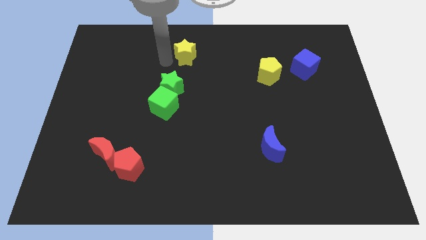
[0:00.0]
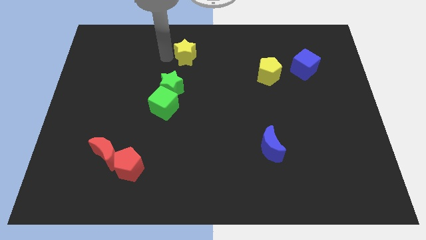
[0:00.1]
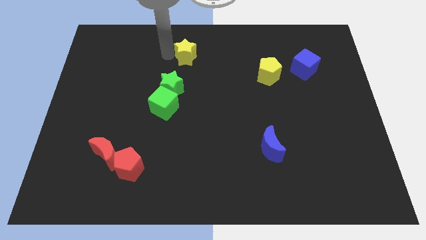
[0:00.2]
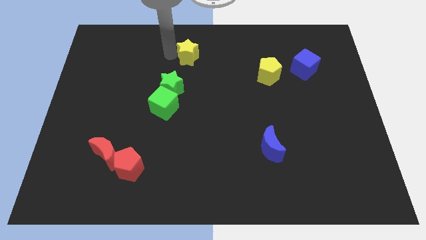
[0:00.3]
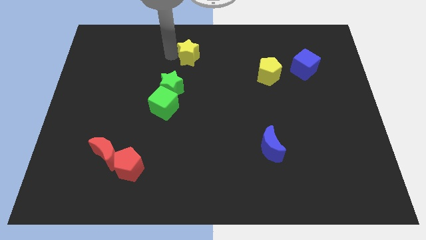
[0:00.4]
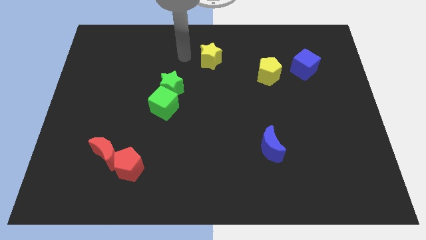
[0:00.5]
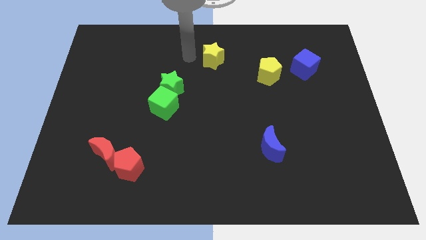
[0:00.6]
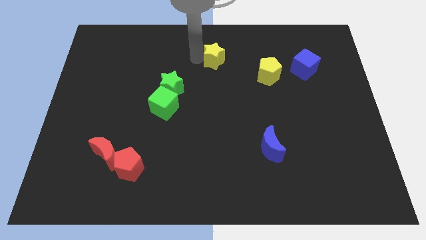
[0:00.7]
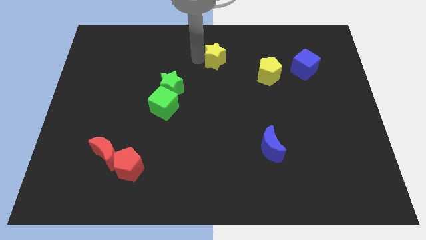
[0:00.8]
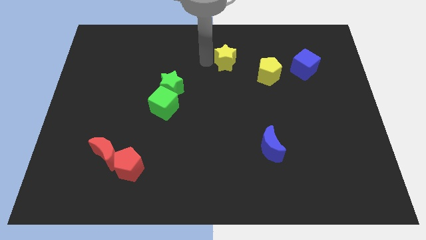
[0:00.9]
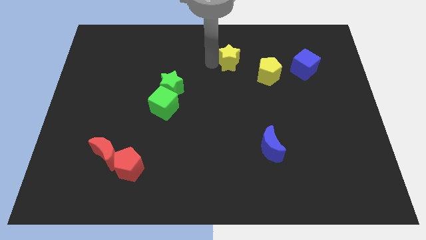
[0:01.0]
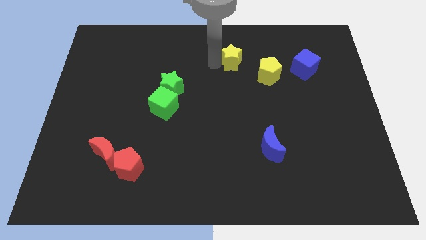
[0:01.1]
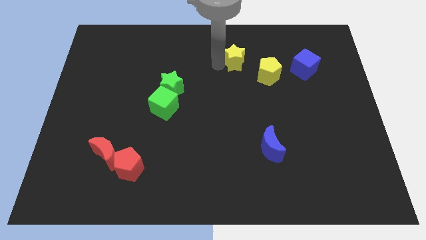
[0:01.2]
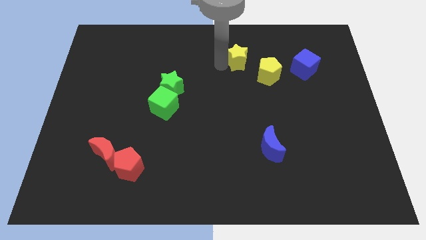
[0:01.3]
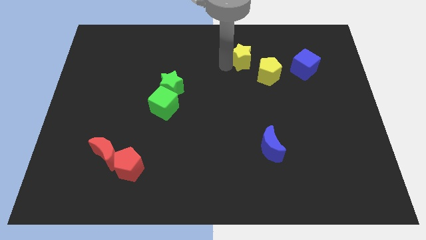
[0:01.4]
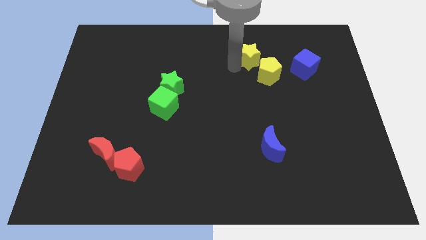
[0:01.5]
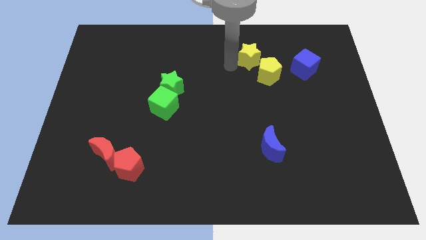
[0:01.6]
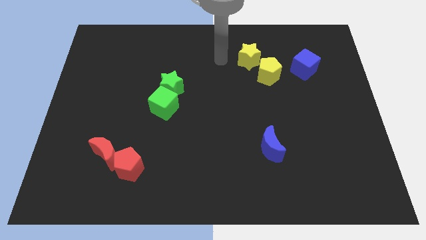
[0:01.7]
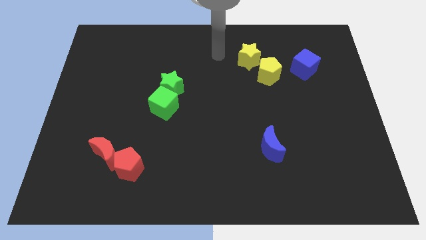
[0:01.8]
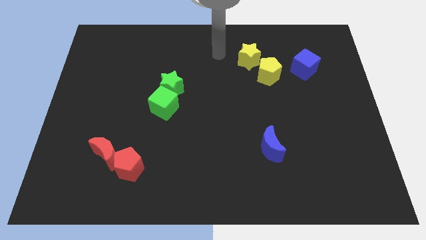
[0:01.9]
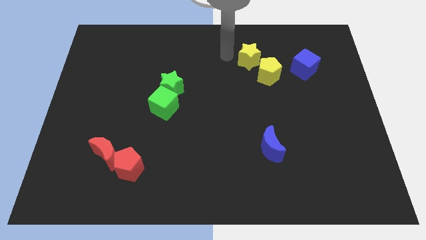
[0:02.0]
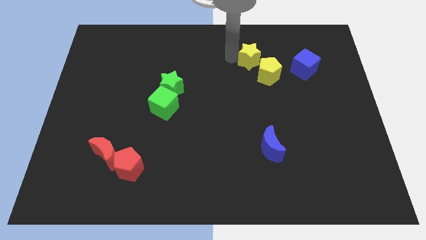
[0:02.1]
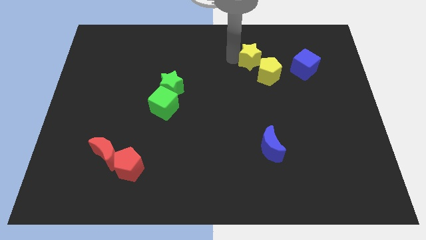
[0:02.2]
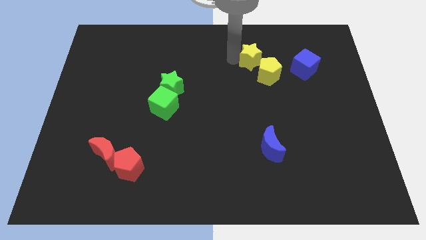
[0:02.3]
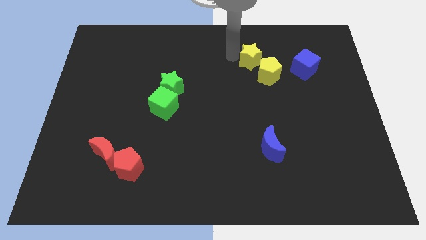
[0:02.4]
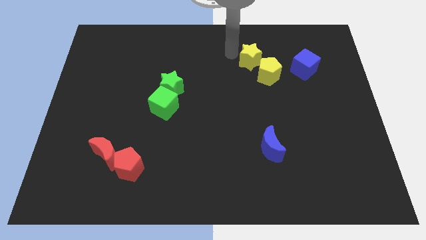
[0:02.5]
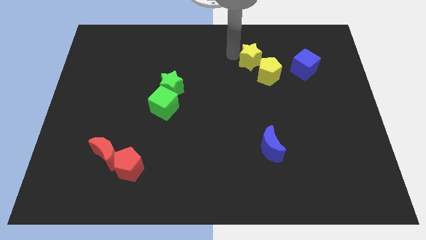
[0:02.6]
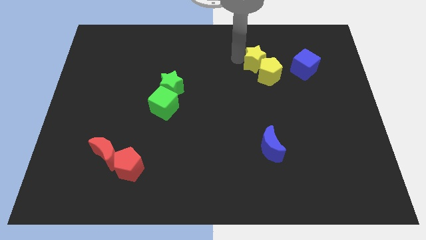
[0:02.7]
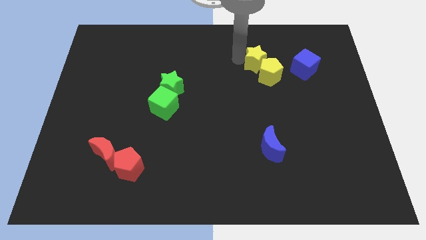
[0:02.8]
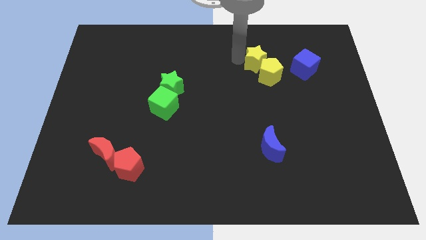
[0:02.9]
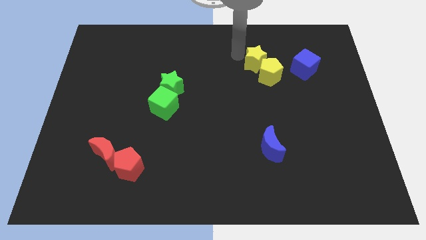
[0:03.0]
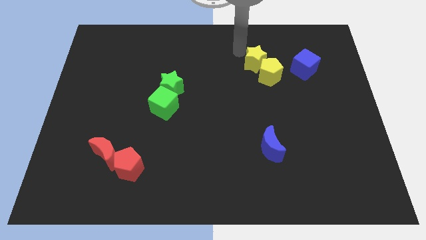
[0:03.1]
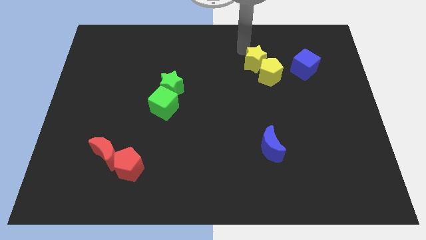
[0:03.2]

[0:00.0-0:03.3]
push the yellow star into the yellow pentagon

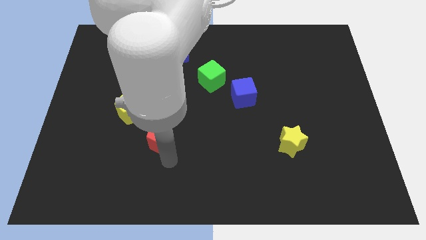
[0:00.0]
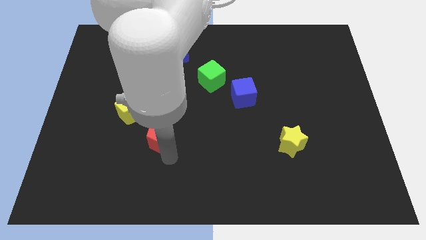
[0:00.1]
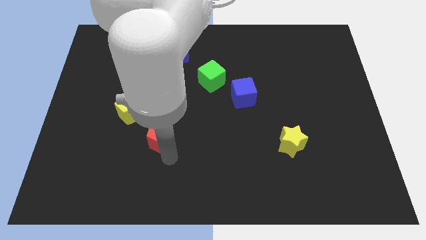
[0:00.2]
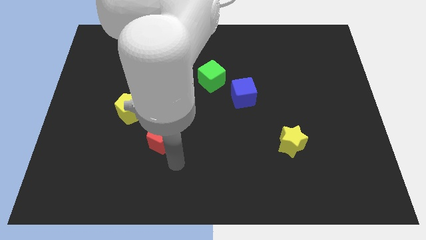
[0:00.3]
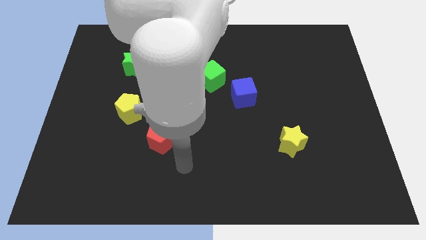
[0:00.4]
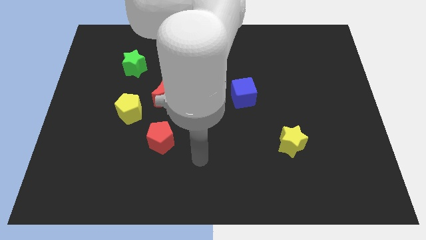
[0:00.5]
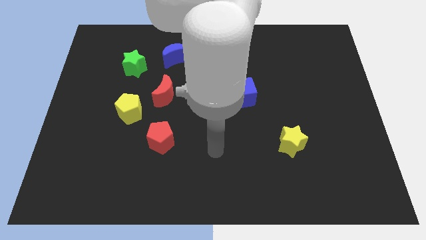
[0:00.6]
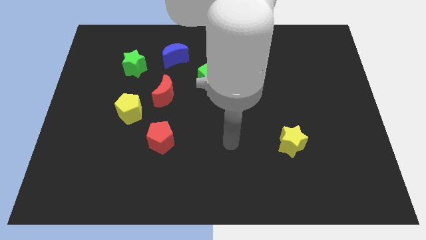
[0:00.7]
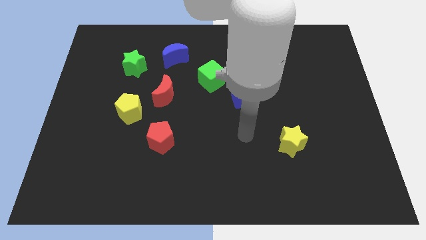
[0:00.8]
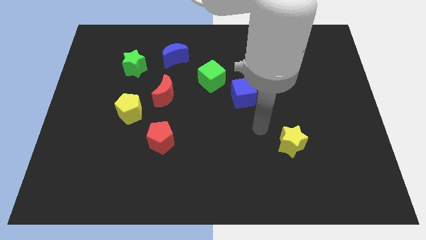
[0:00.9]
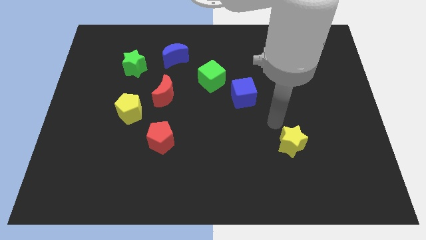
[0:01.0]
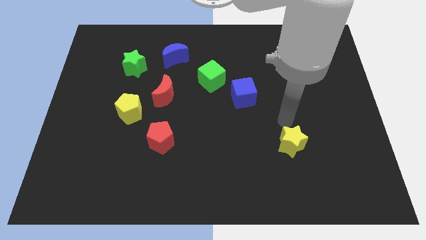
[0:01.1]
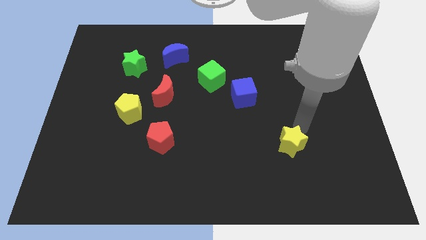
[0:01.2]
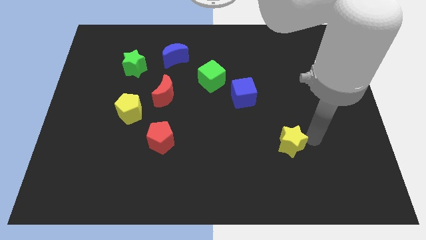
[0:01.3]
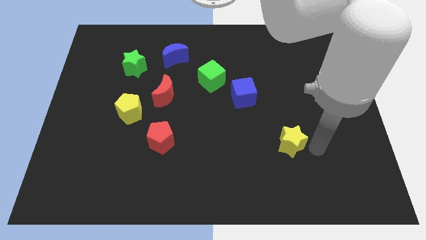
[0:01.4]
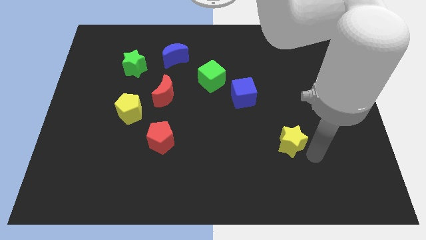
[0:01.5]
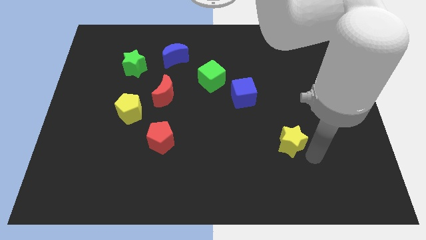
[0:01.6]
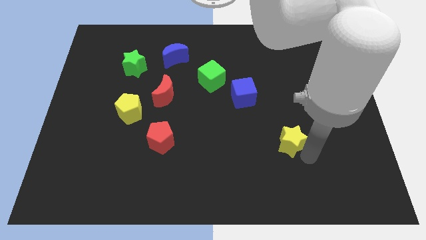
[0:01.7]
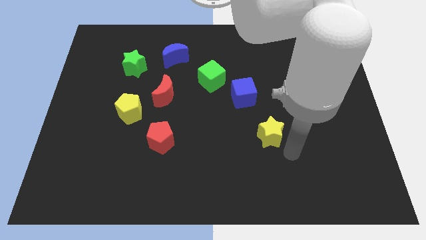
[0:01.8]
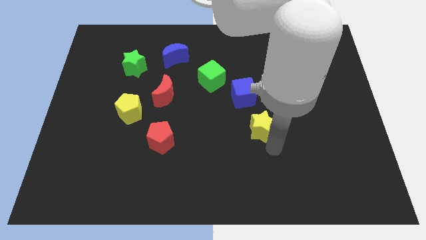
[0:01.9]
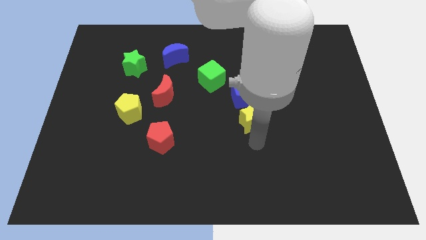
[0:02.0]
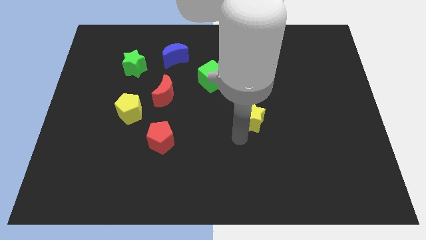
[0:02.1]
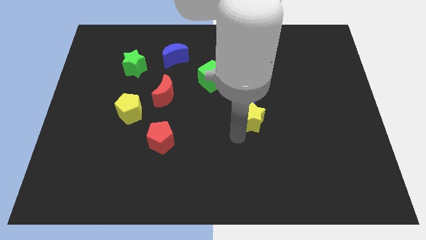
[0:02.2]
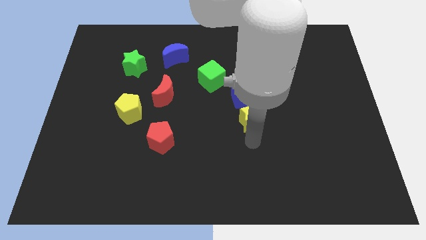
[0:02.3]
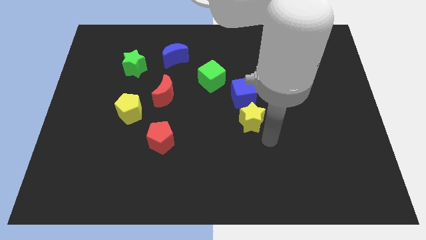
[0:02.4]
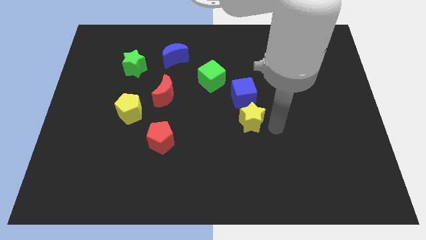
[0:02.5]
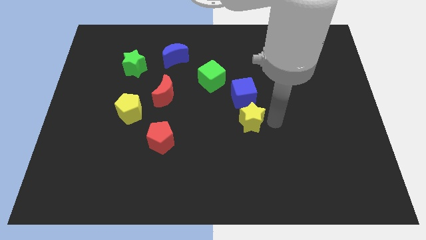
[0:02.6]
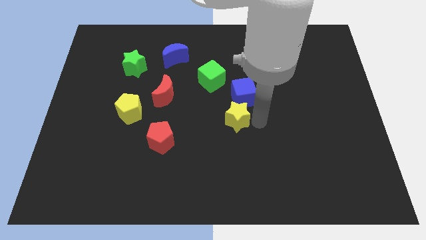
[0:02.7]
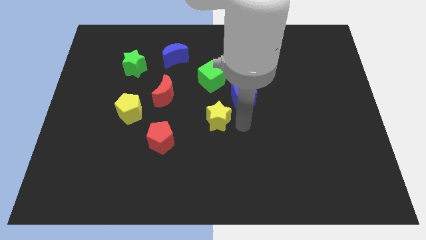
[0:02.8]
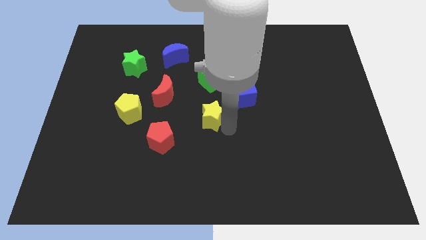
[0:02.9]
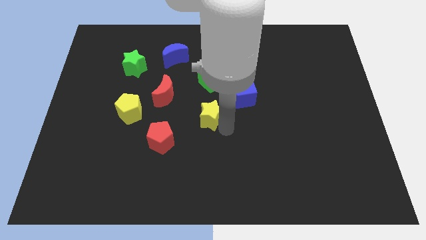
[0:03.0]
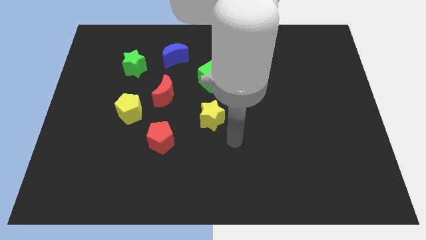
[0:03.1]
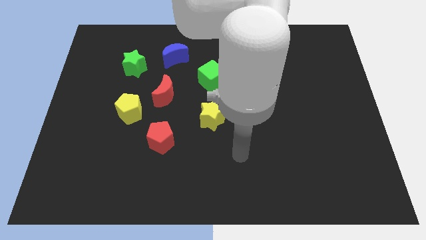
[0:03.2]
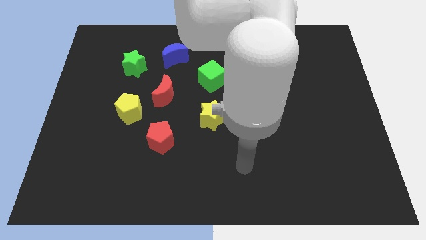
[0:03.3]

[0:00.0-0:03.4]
move yellow star to the centre of the board

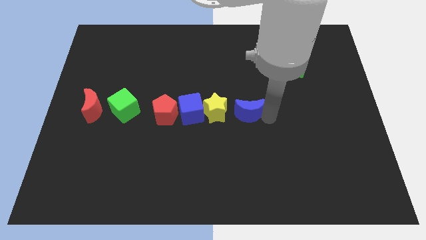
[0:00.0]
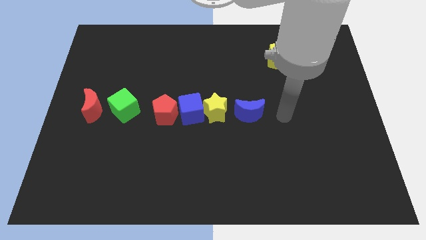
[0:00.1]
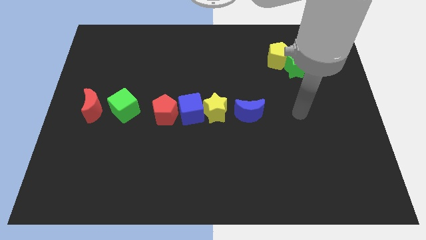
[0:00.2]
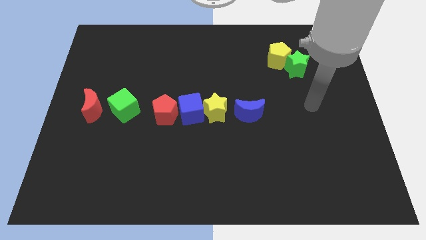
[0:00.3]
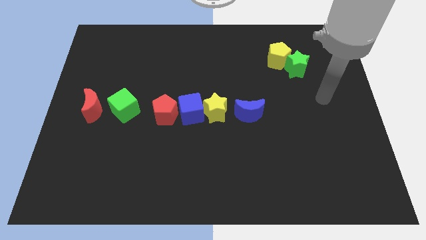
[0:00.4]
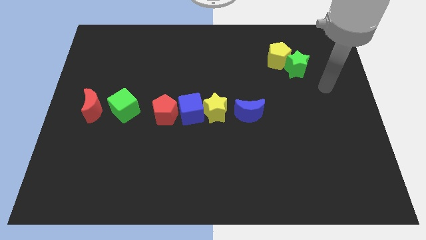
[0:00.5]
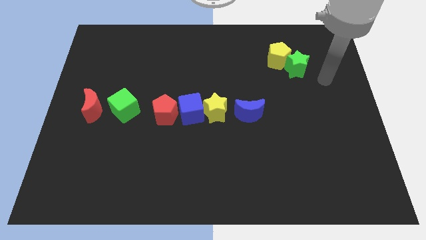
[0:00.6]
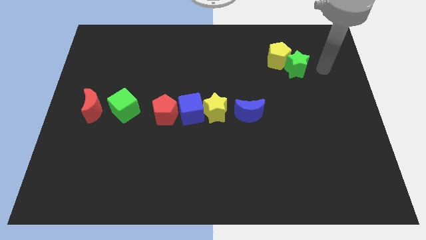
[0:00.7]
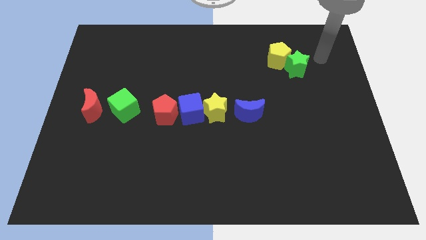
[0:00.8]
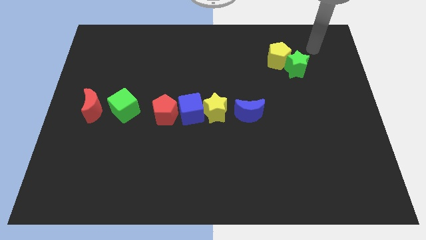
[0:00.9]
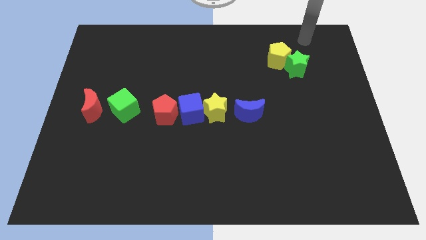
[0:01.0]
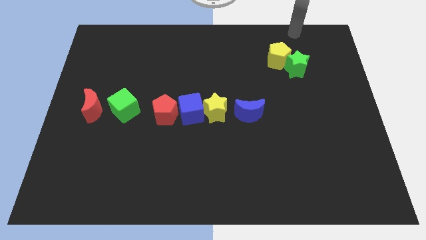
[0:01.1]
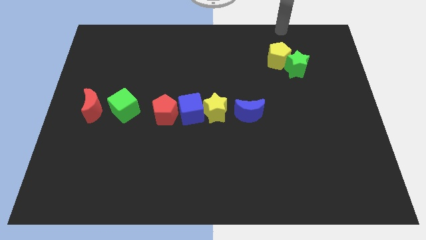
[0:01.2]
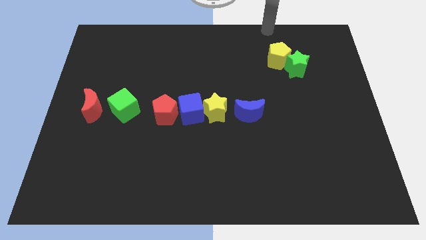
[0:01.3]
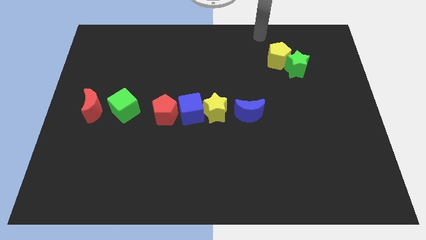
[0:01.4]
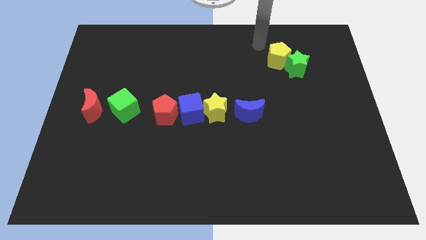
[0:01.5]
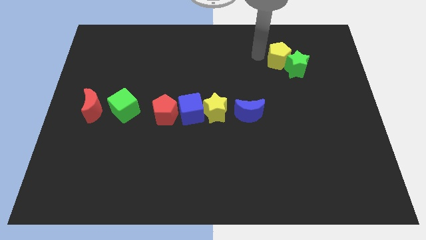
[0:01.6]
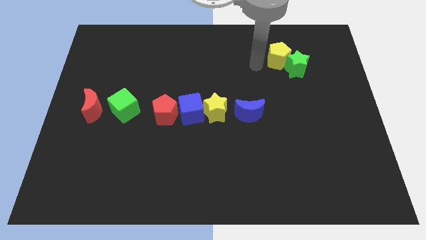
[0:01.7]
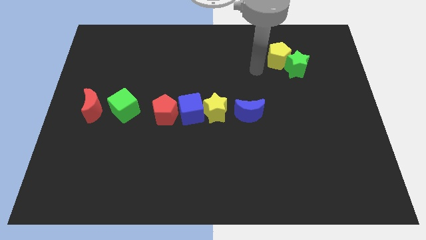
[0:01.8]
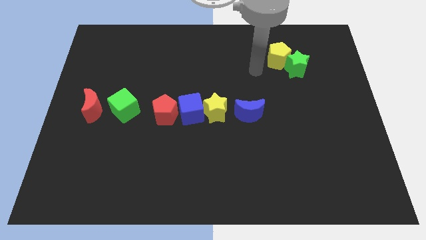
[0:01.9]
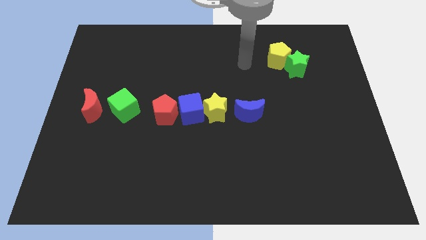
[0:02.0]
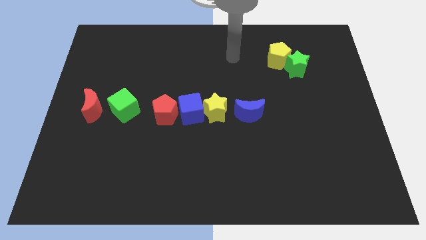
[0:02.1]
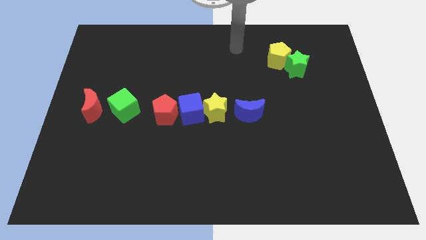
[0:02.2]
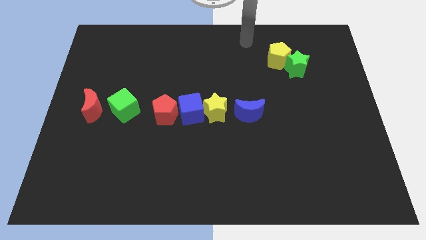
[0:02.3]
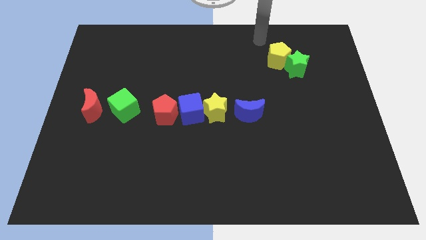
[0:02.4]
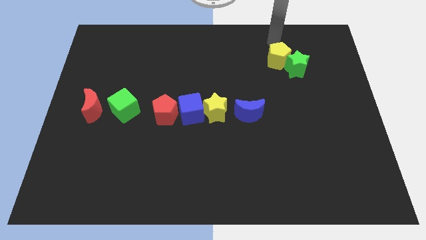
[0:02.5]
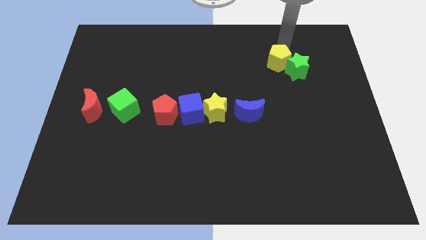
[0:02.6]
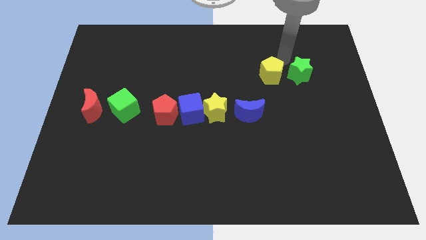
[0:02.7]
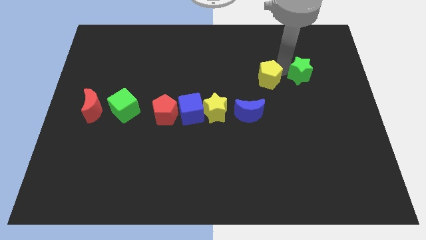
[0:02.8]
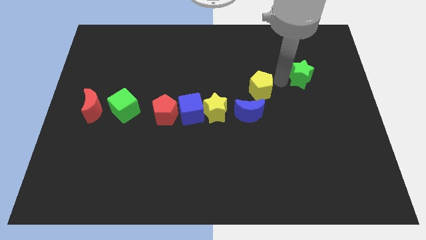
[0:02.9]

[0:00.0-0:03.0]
push the yellow pentagon to the left of the green star
